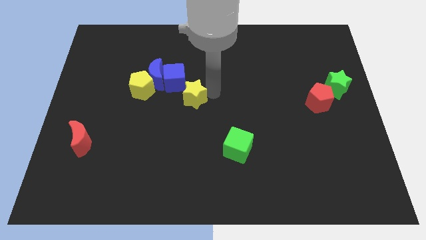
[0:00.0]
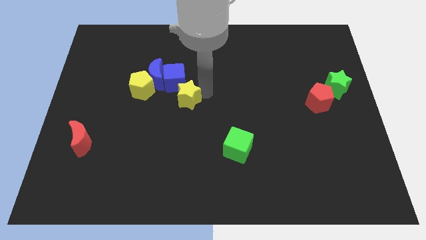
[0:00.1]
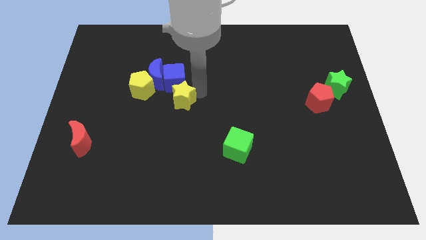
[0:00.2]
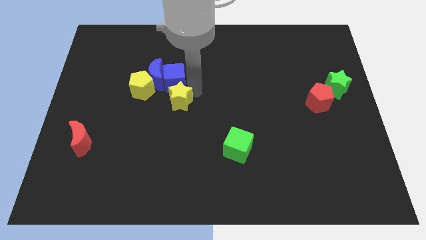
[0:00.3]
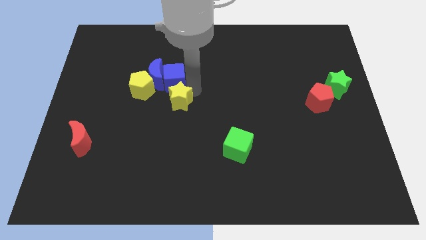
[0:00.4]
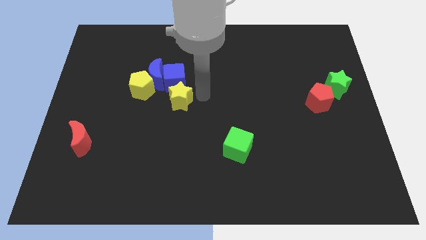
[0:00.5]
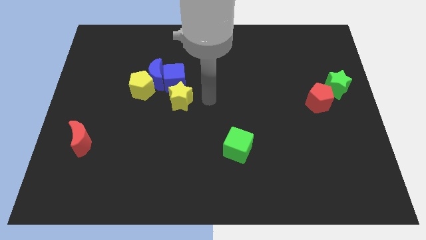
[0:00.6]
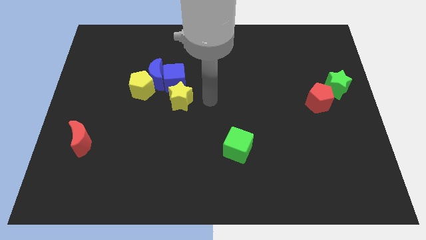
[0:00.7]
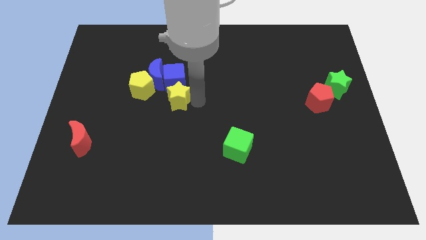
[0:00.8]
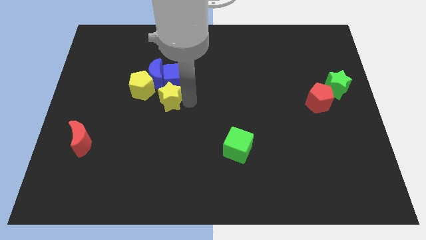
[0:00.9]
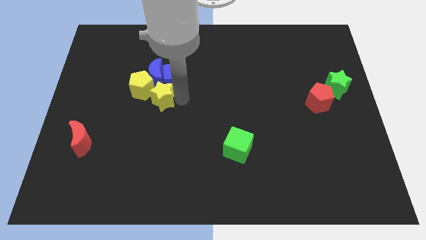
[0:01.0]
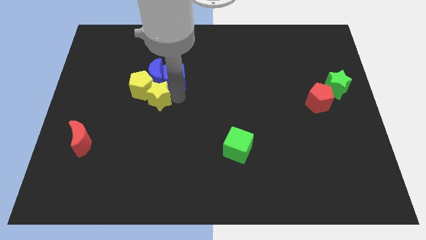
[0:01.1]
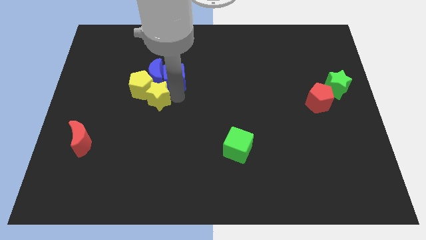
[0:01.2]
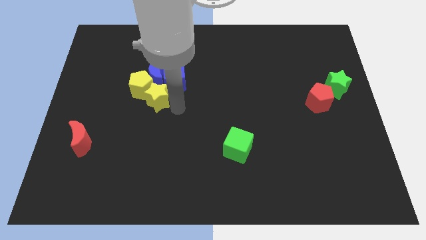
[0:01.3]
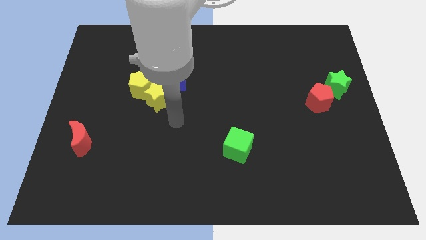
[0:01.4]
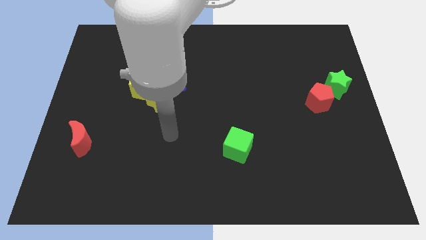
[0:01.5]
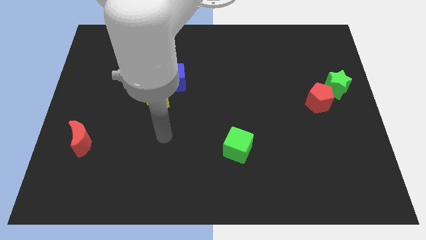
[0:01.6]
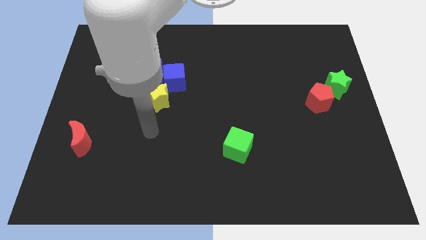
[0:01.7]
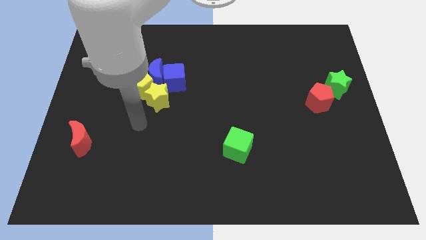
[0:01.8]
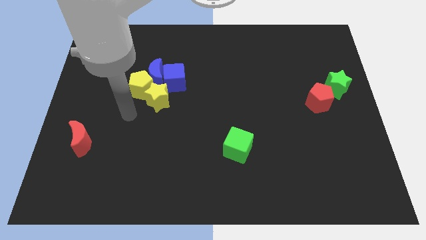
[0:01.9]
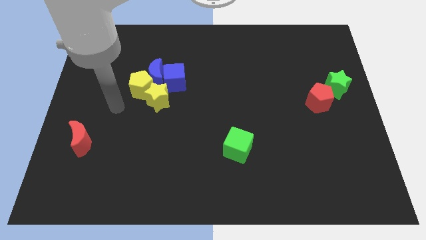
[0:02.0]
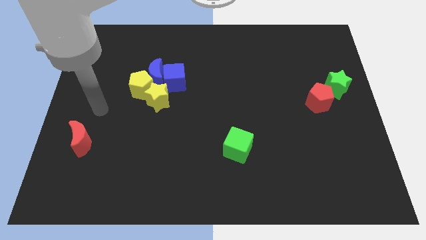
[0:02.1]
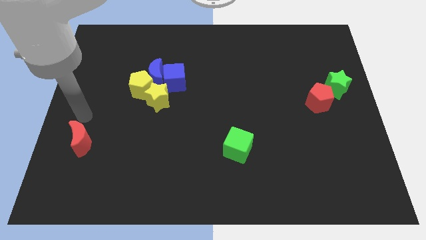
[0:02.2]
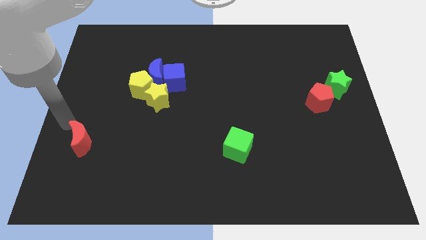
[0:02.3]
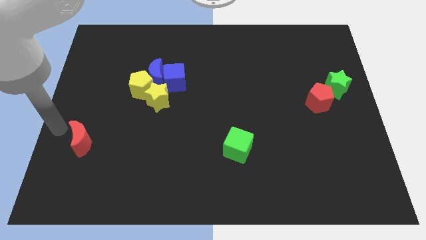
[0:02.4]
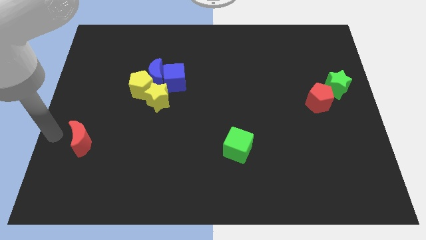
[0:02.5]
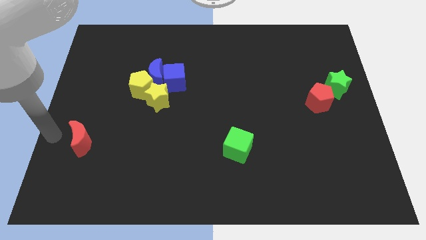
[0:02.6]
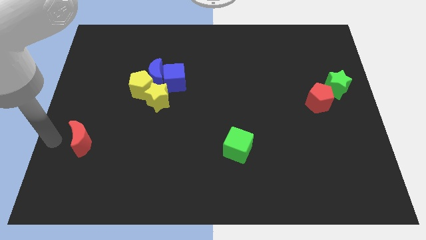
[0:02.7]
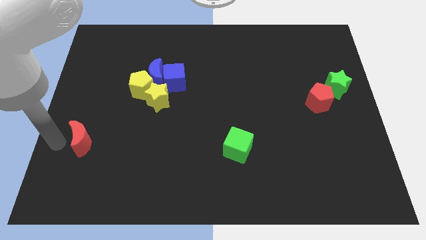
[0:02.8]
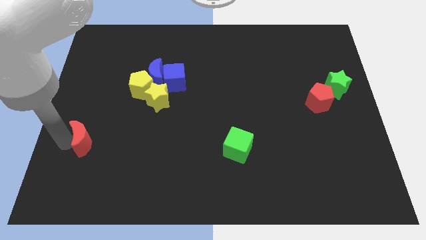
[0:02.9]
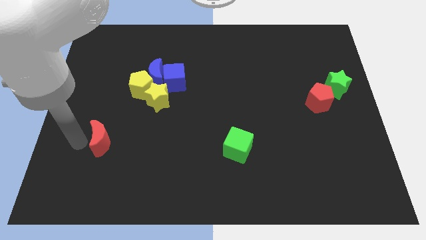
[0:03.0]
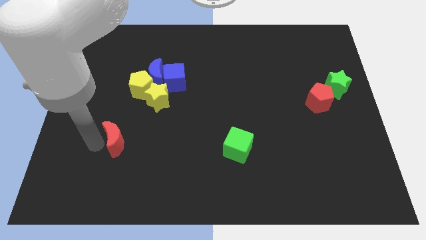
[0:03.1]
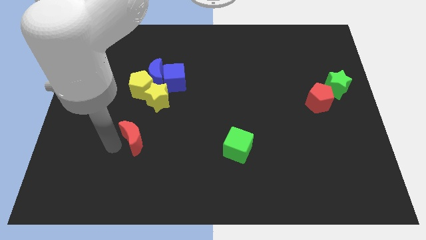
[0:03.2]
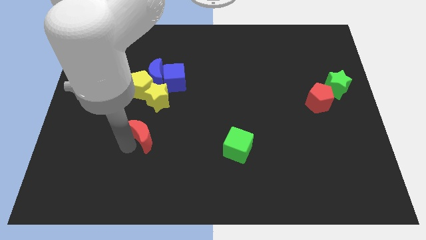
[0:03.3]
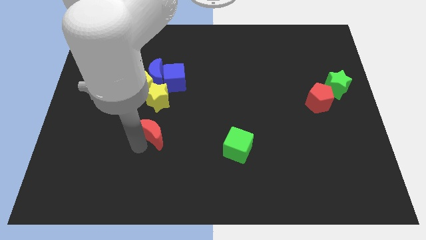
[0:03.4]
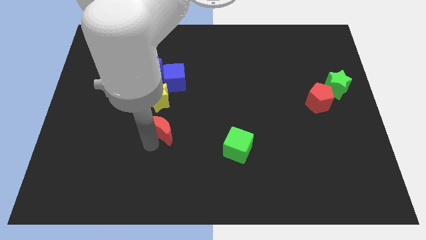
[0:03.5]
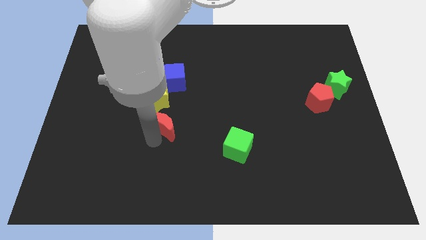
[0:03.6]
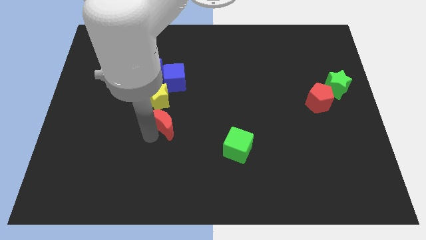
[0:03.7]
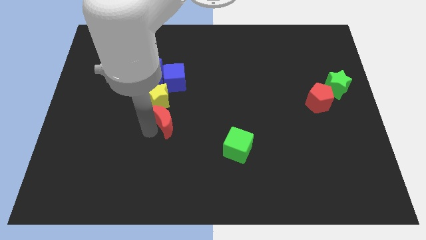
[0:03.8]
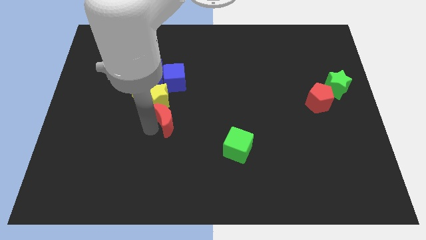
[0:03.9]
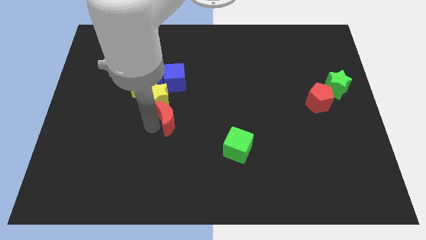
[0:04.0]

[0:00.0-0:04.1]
push yellow star right to the yellow pentagon

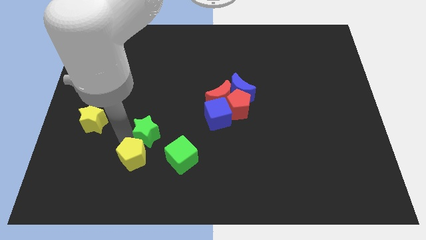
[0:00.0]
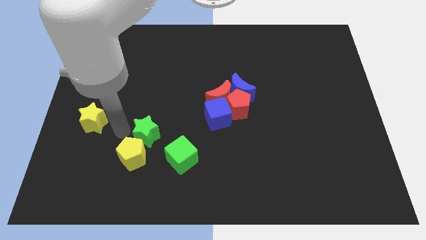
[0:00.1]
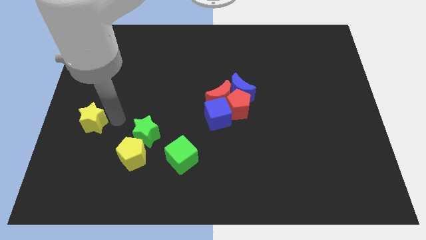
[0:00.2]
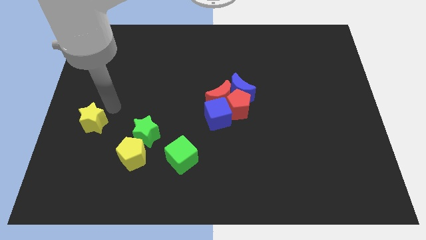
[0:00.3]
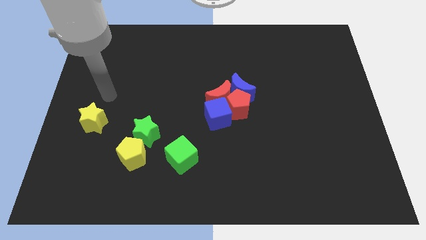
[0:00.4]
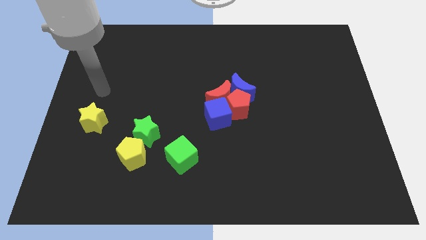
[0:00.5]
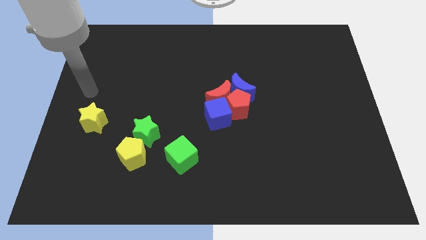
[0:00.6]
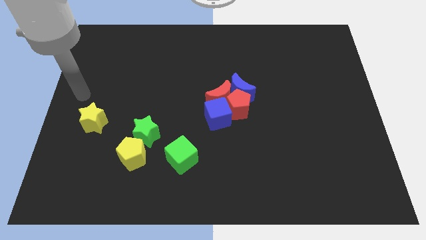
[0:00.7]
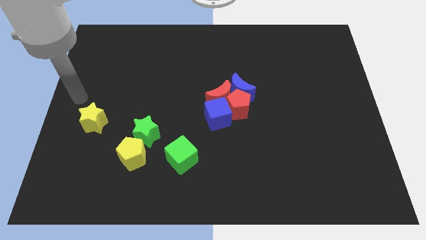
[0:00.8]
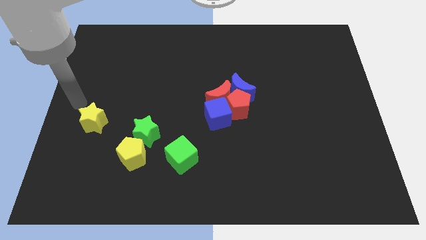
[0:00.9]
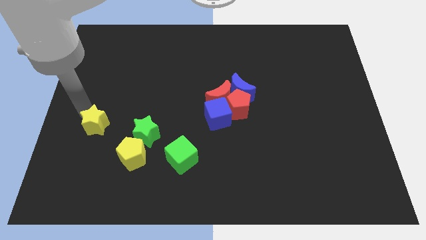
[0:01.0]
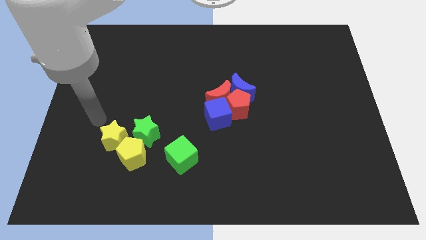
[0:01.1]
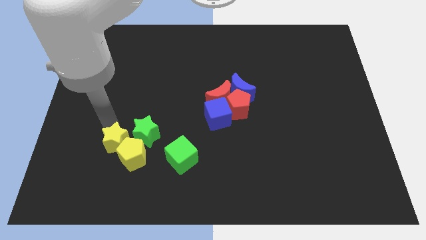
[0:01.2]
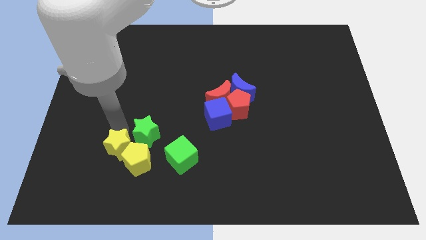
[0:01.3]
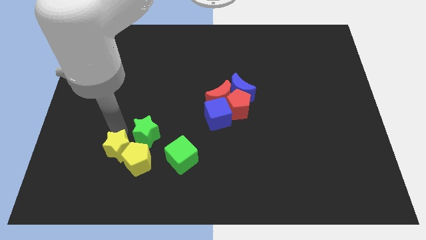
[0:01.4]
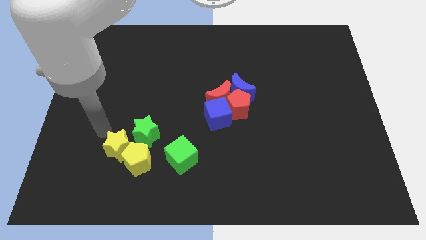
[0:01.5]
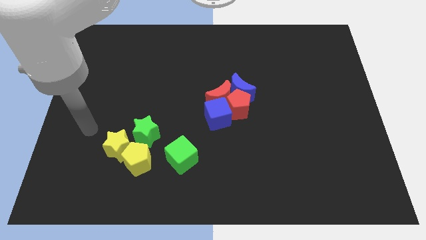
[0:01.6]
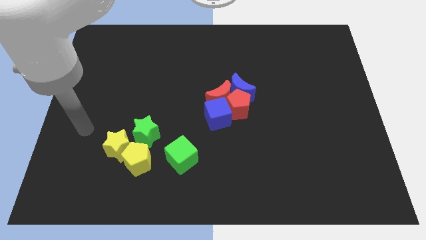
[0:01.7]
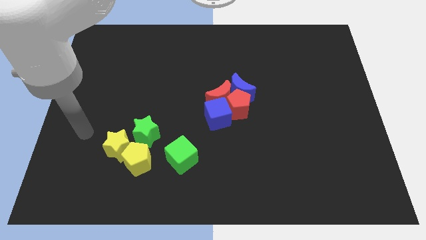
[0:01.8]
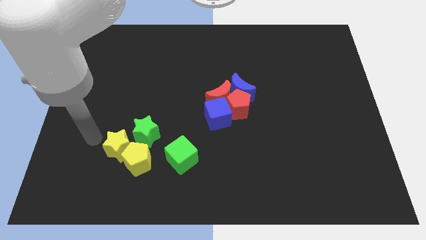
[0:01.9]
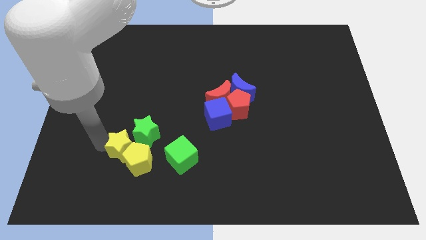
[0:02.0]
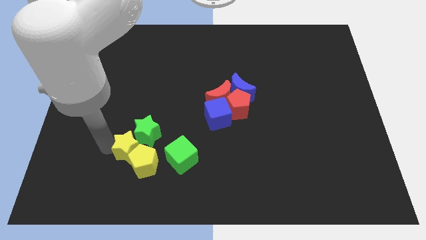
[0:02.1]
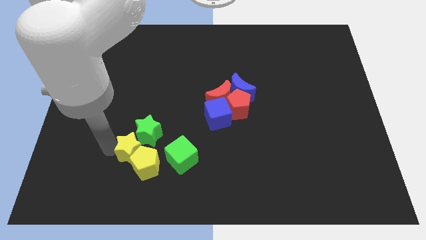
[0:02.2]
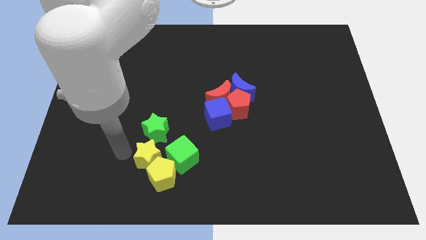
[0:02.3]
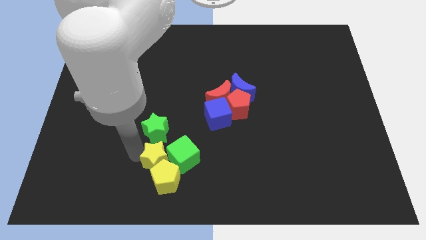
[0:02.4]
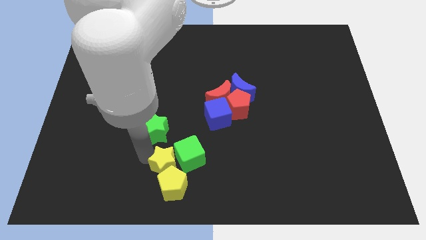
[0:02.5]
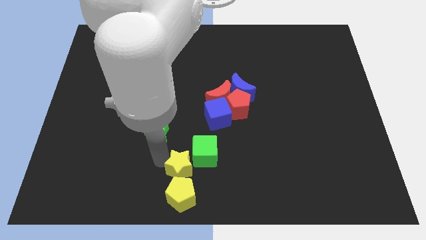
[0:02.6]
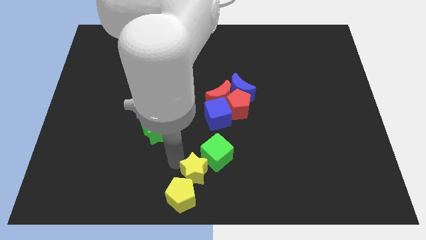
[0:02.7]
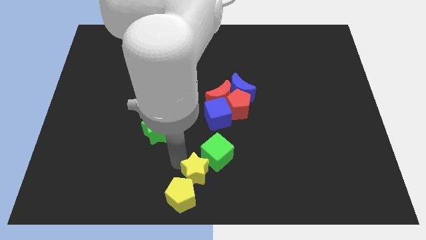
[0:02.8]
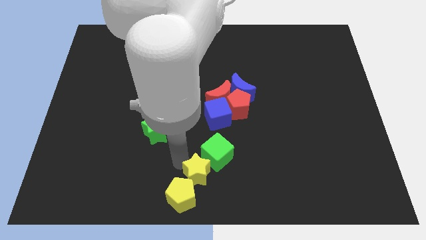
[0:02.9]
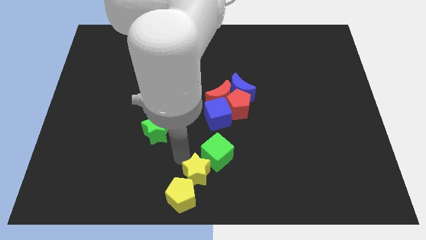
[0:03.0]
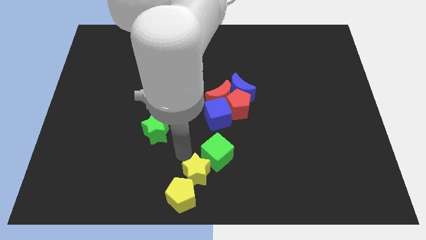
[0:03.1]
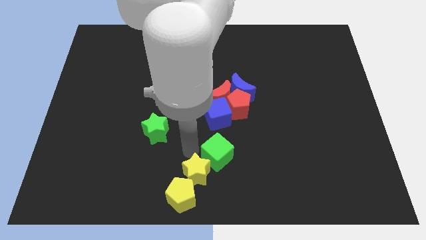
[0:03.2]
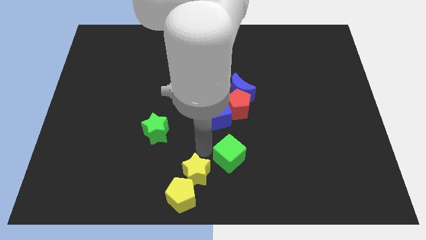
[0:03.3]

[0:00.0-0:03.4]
push the yellow blocks together slightly towards the bottom center of the board

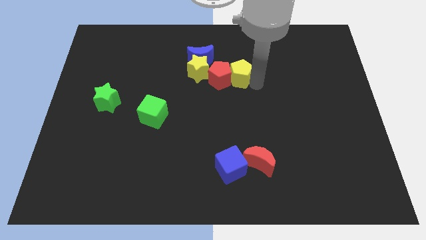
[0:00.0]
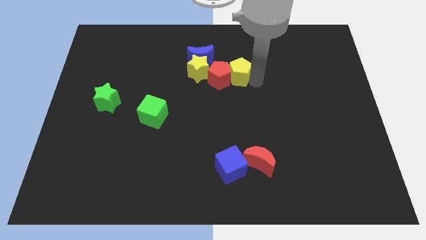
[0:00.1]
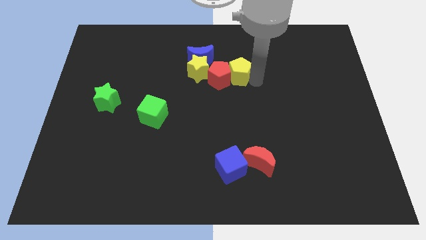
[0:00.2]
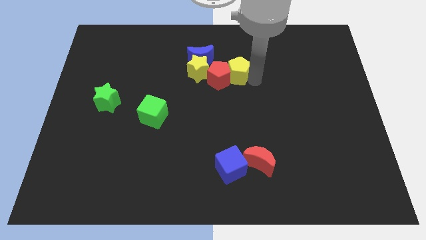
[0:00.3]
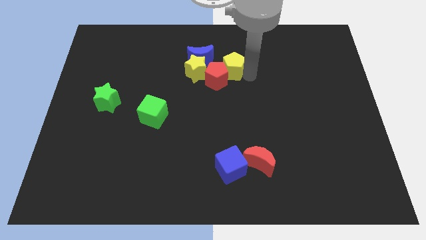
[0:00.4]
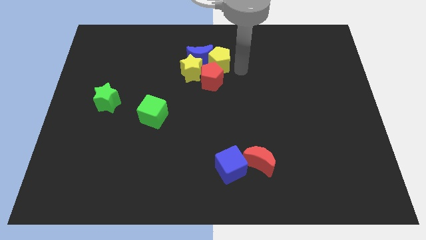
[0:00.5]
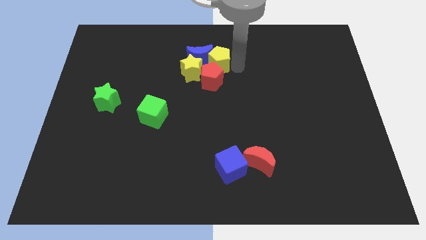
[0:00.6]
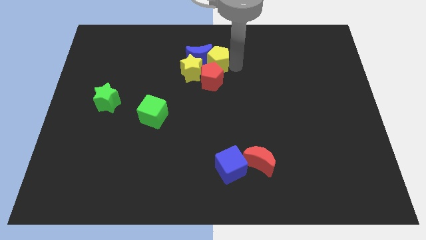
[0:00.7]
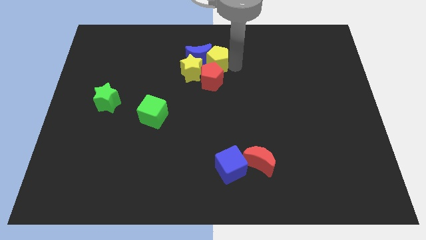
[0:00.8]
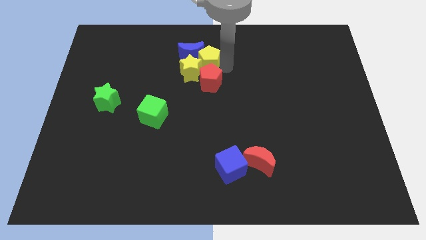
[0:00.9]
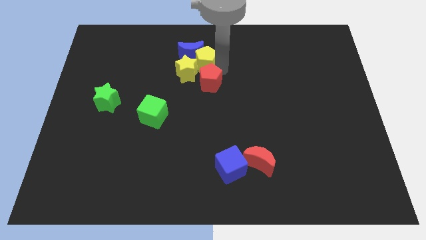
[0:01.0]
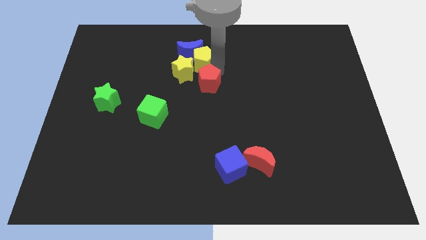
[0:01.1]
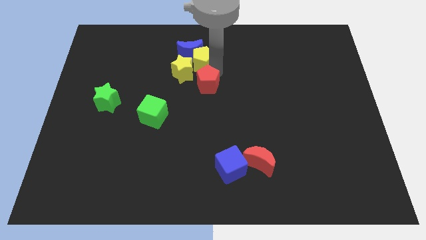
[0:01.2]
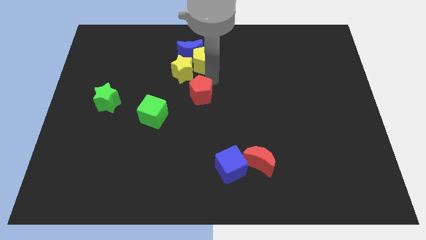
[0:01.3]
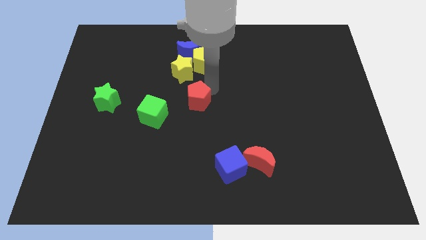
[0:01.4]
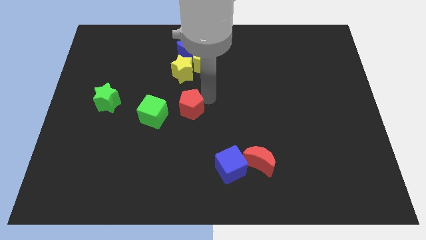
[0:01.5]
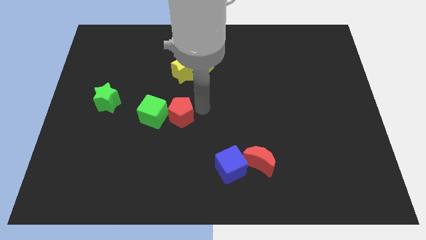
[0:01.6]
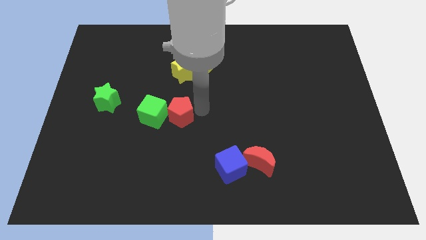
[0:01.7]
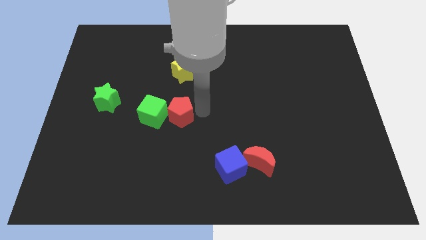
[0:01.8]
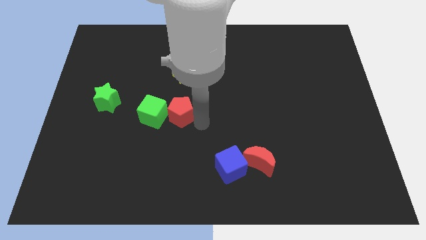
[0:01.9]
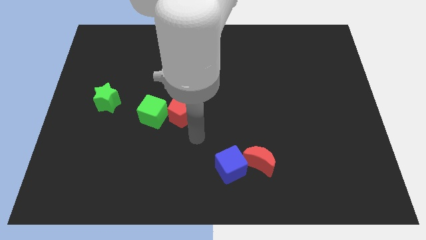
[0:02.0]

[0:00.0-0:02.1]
place red pentagon to the right of green cube
